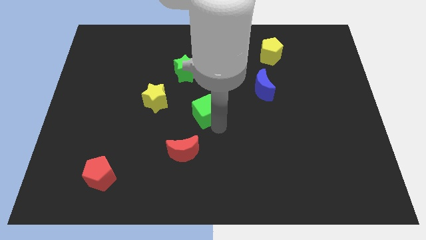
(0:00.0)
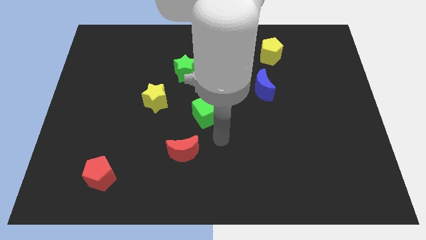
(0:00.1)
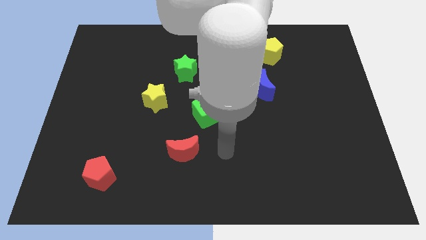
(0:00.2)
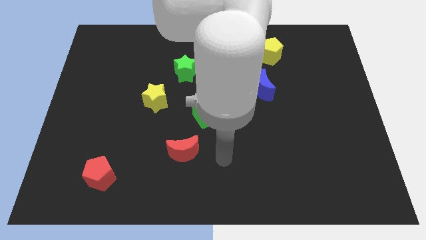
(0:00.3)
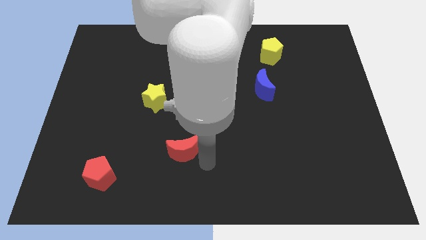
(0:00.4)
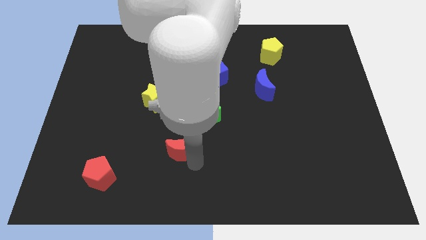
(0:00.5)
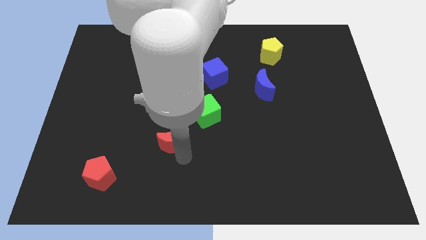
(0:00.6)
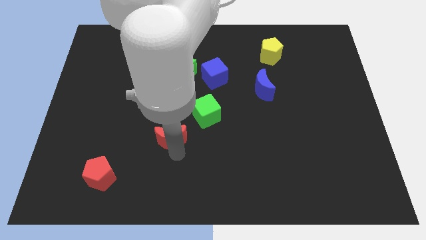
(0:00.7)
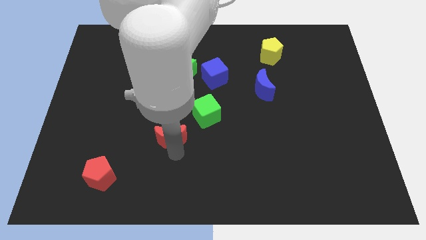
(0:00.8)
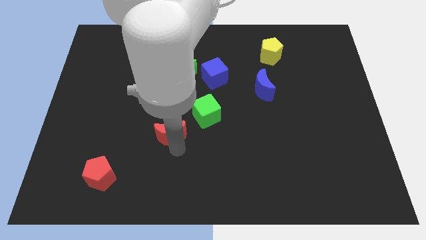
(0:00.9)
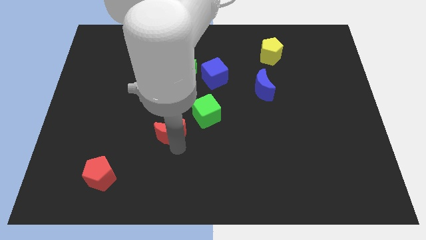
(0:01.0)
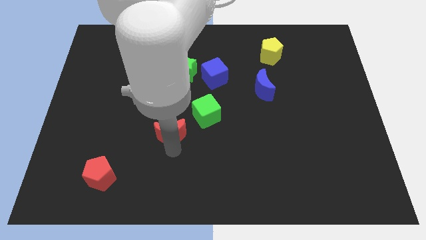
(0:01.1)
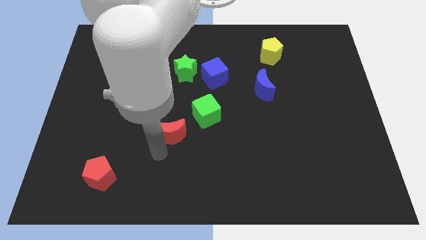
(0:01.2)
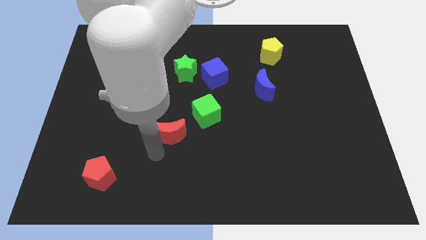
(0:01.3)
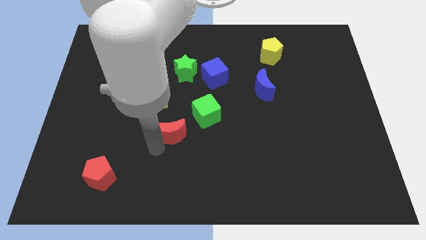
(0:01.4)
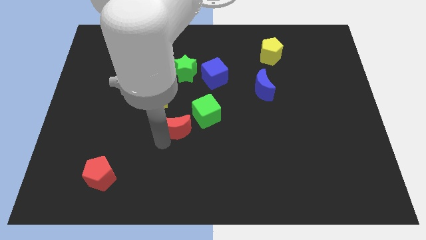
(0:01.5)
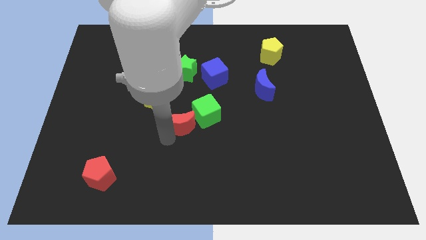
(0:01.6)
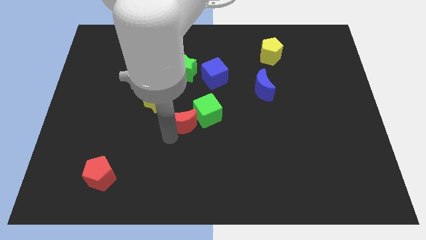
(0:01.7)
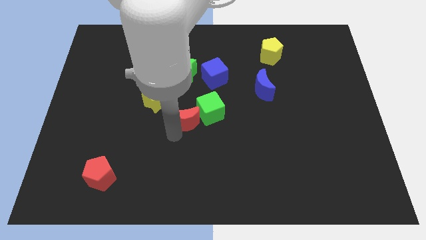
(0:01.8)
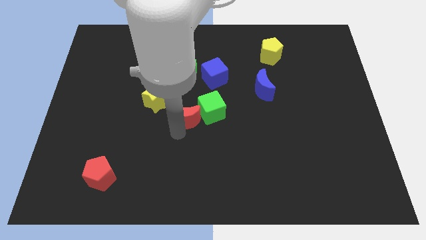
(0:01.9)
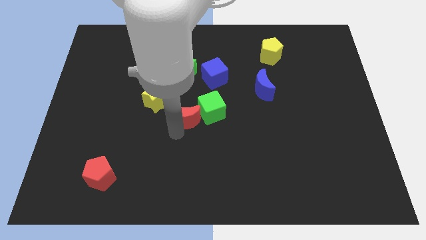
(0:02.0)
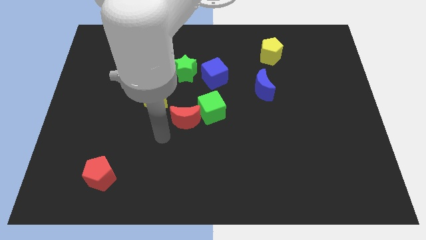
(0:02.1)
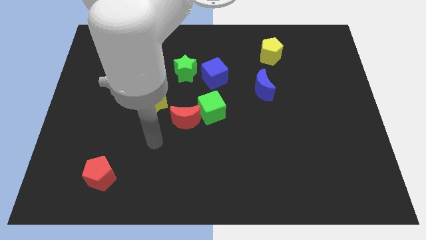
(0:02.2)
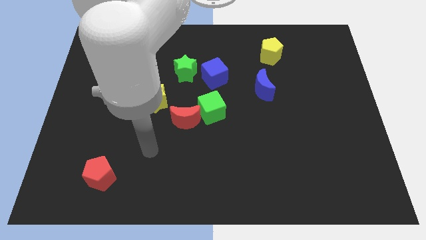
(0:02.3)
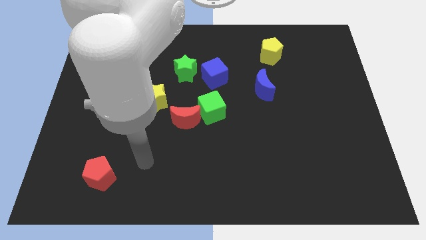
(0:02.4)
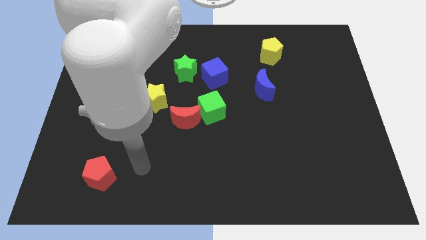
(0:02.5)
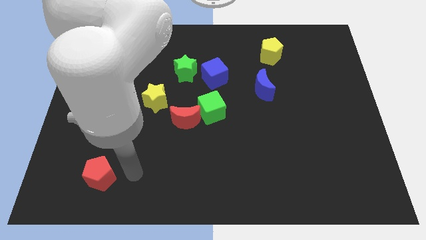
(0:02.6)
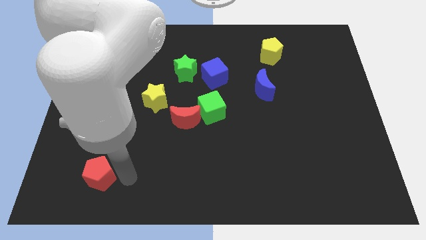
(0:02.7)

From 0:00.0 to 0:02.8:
move the red crescent slightly to the top

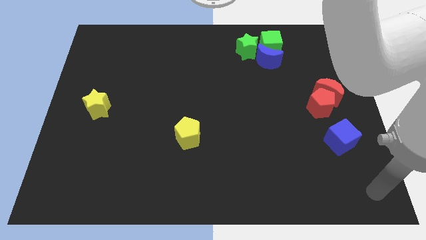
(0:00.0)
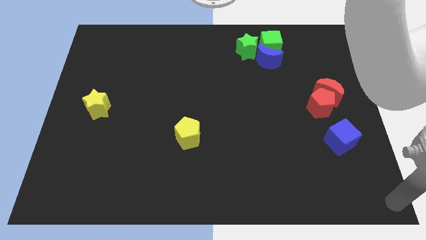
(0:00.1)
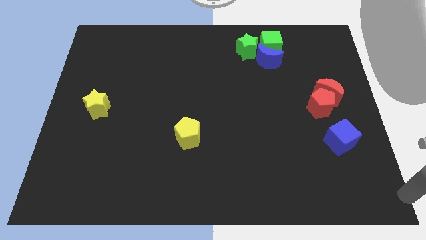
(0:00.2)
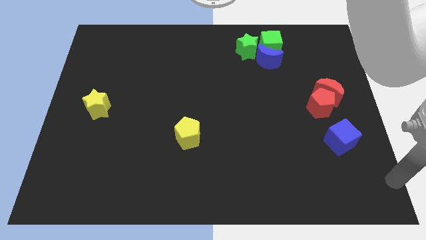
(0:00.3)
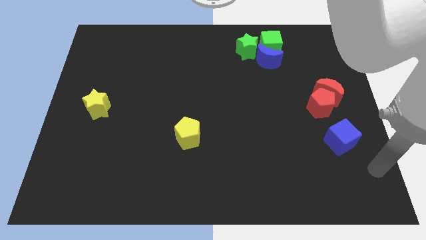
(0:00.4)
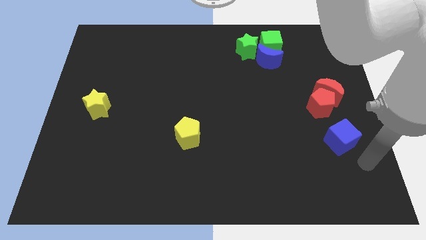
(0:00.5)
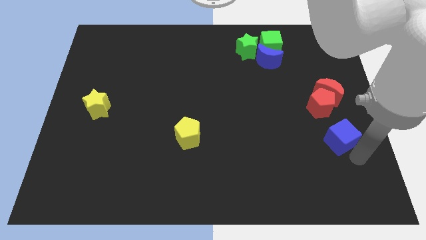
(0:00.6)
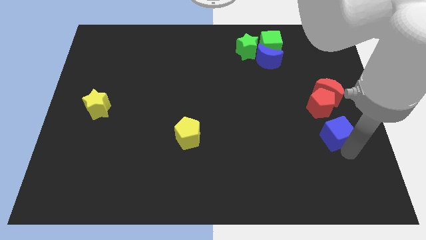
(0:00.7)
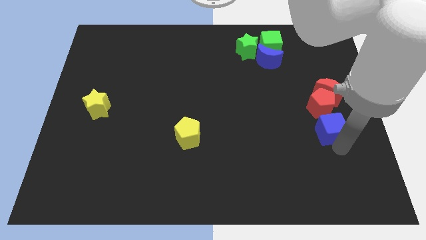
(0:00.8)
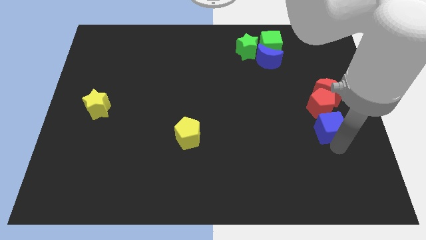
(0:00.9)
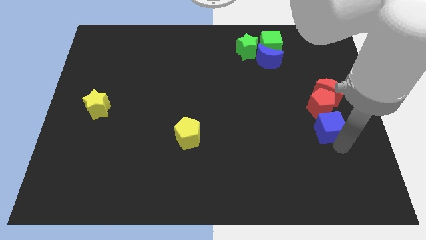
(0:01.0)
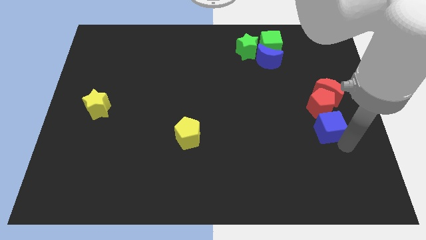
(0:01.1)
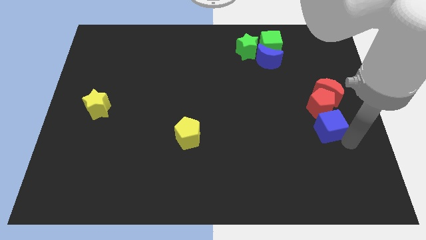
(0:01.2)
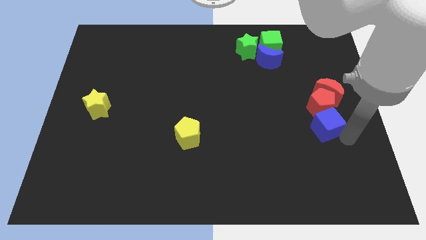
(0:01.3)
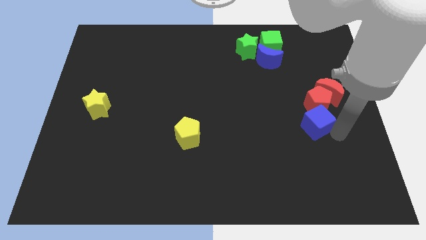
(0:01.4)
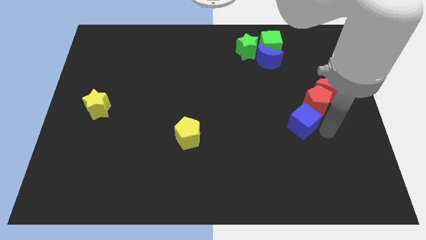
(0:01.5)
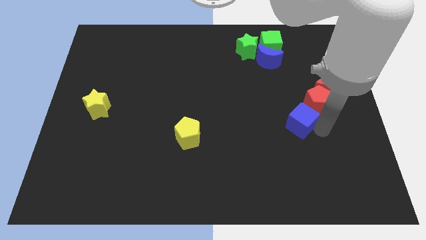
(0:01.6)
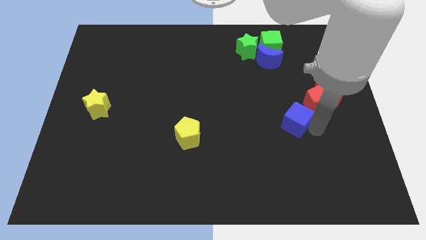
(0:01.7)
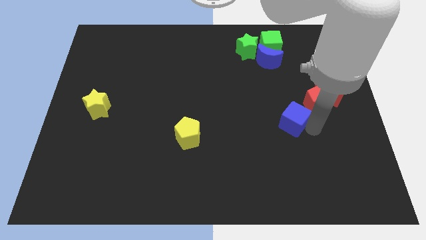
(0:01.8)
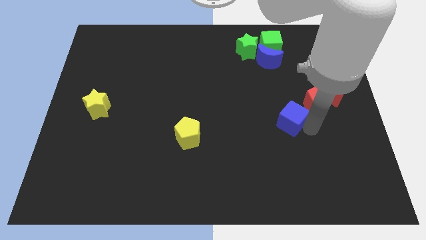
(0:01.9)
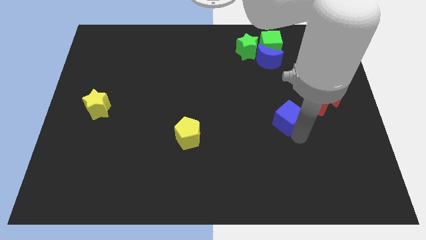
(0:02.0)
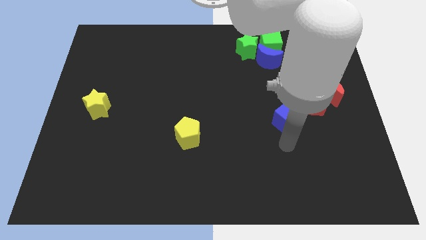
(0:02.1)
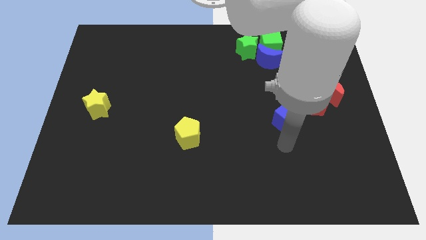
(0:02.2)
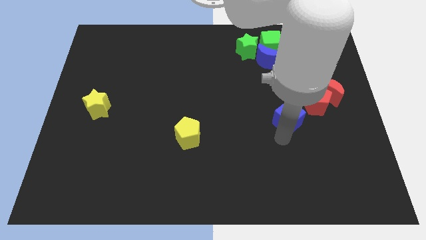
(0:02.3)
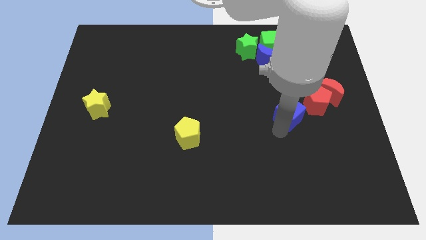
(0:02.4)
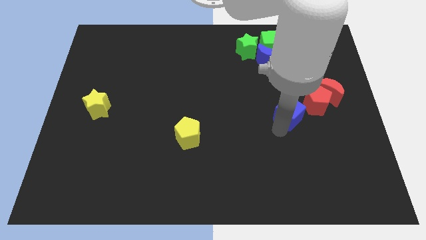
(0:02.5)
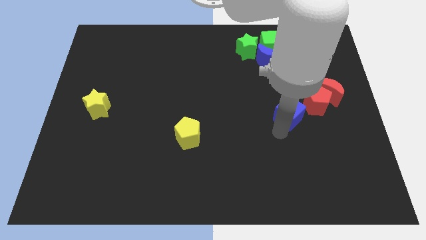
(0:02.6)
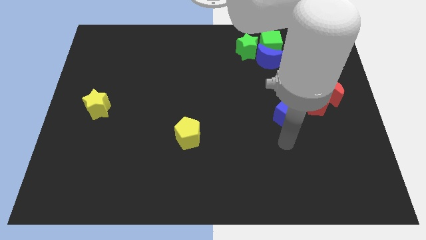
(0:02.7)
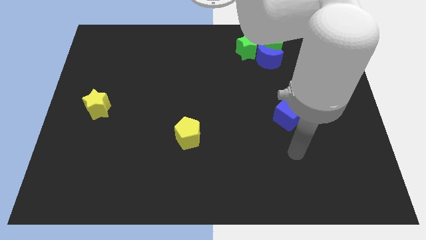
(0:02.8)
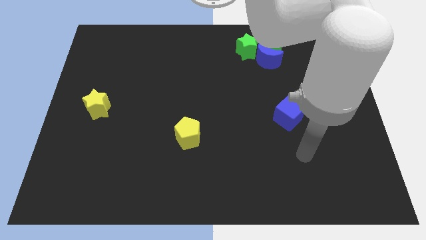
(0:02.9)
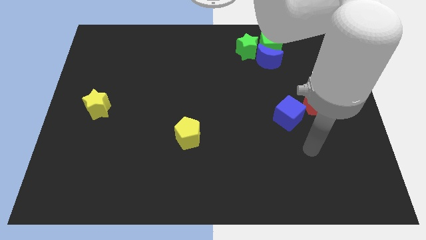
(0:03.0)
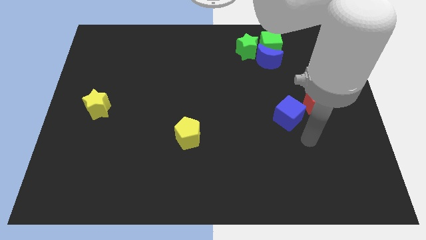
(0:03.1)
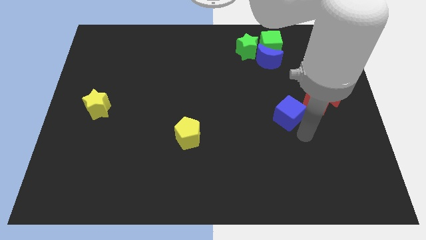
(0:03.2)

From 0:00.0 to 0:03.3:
move the blue square slightly towards the top

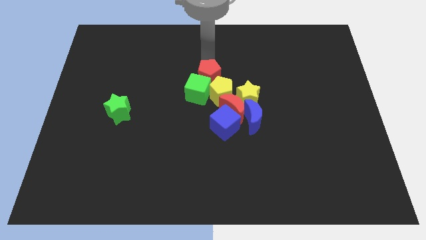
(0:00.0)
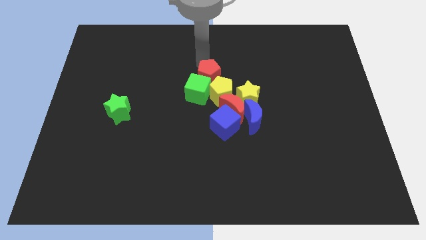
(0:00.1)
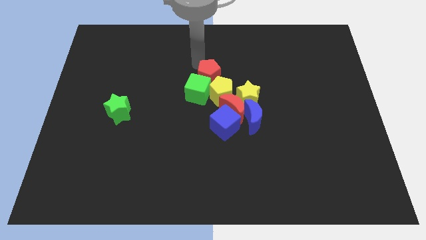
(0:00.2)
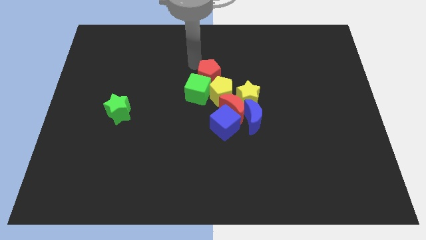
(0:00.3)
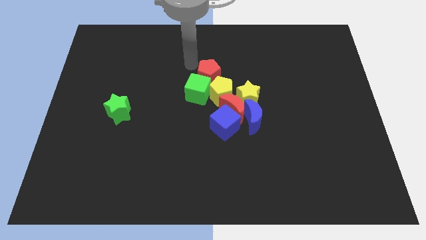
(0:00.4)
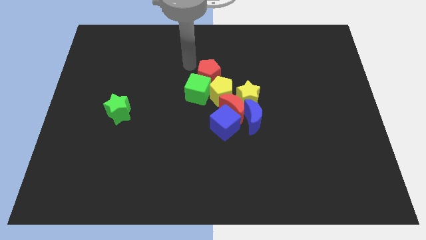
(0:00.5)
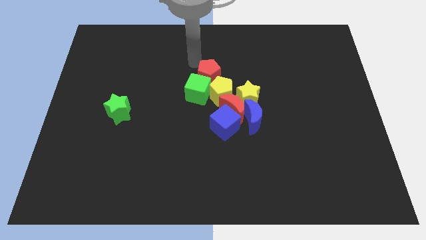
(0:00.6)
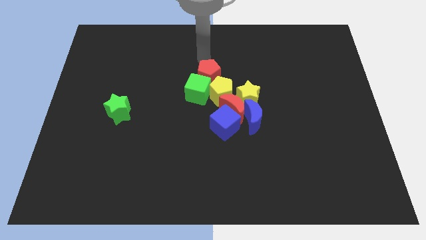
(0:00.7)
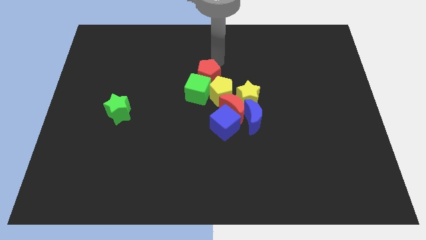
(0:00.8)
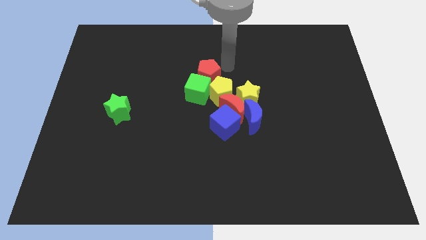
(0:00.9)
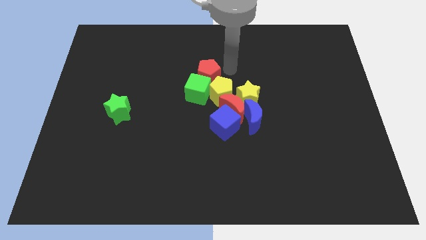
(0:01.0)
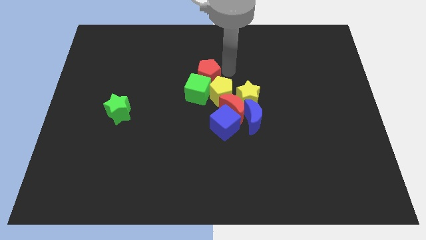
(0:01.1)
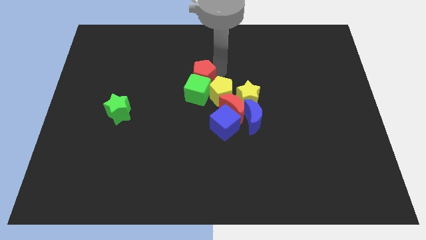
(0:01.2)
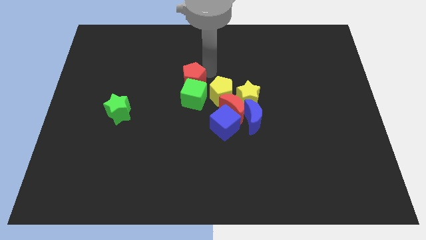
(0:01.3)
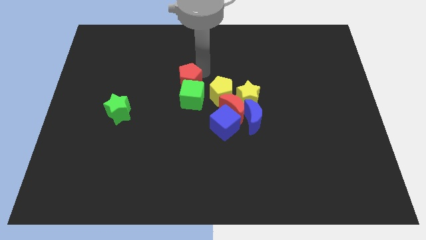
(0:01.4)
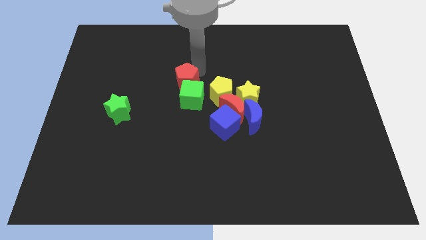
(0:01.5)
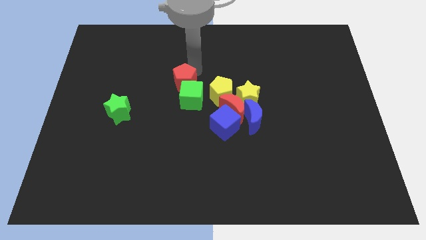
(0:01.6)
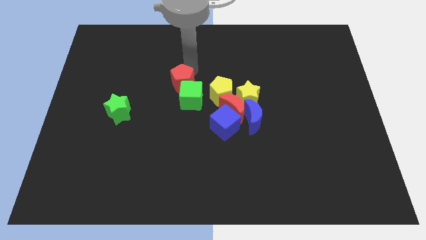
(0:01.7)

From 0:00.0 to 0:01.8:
separate the red pentagon and green cube from the group of blocks

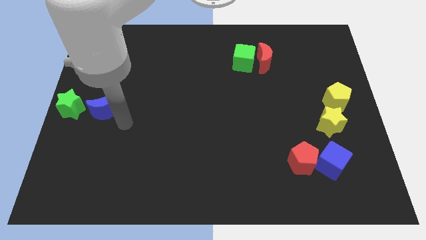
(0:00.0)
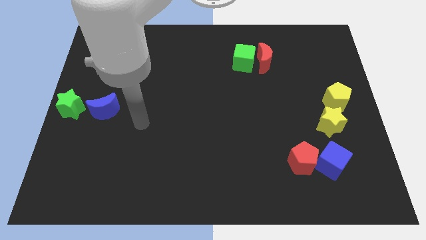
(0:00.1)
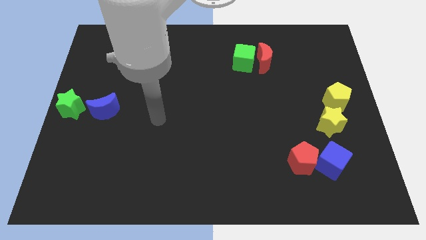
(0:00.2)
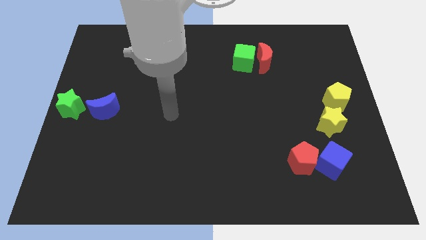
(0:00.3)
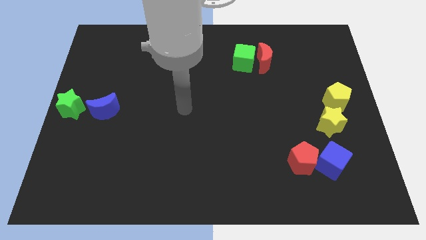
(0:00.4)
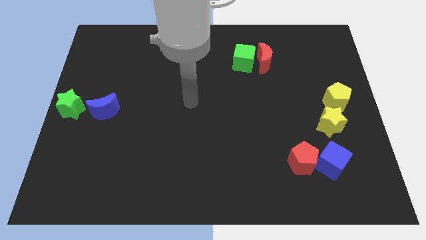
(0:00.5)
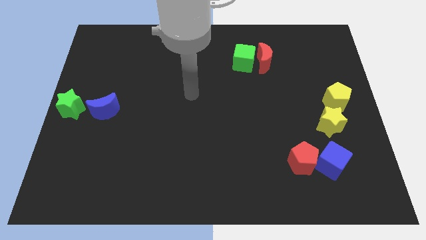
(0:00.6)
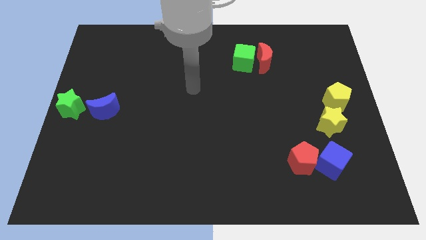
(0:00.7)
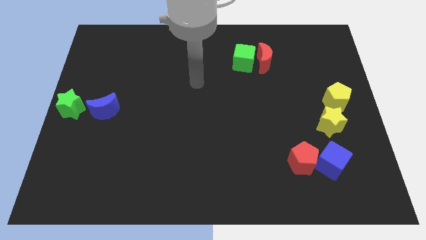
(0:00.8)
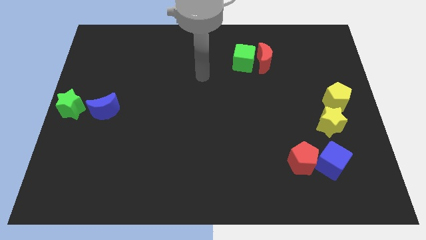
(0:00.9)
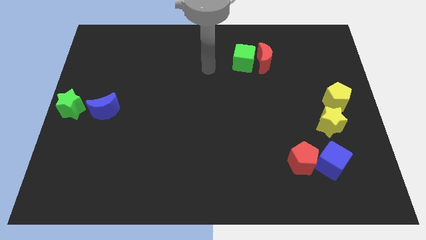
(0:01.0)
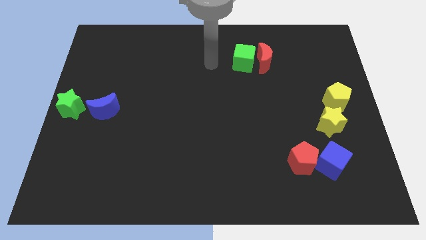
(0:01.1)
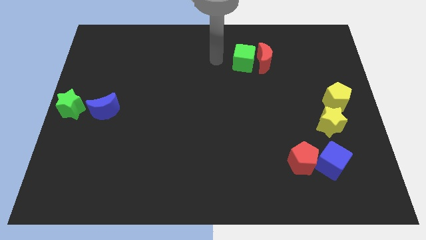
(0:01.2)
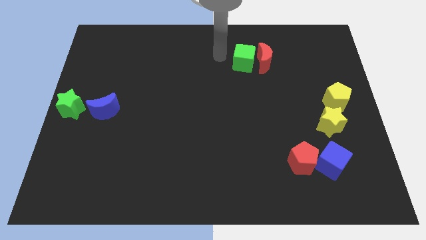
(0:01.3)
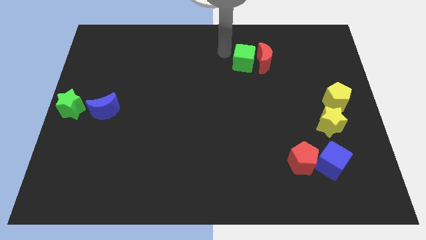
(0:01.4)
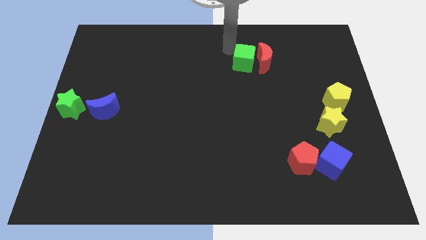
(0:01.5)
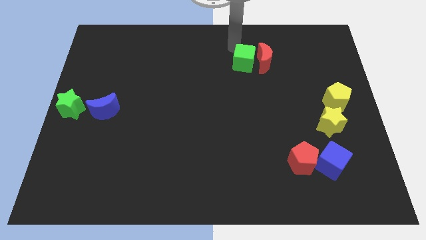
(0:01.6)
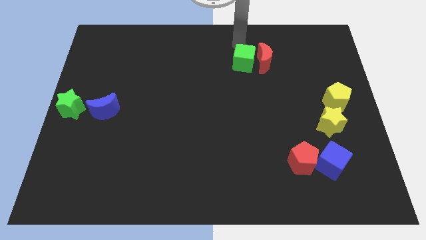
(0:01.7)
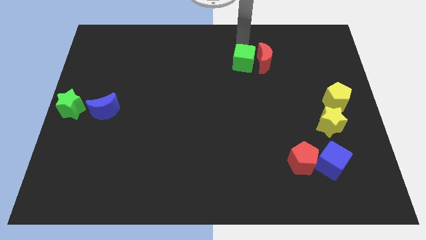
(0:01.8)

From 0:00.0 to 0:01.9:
move arm to the top center of the board
